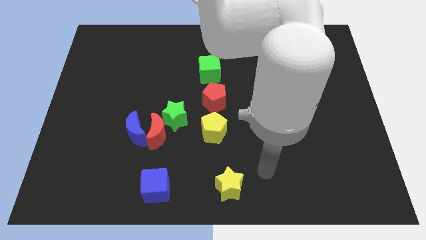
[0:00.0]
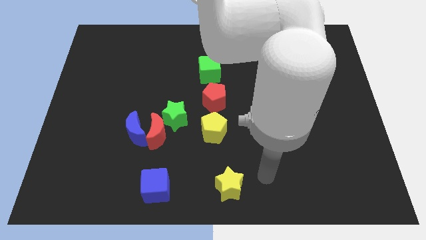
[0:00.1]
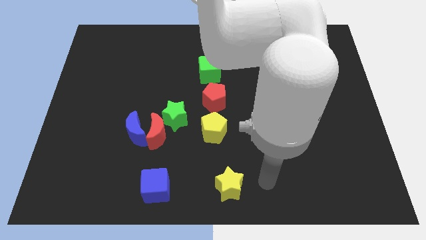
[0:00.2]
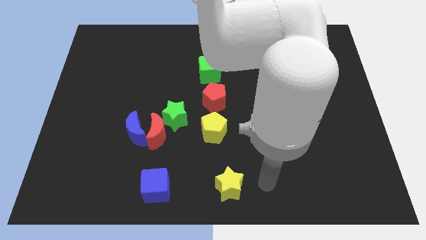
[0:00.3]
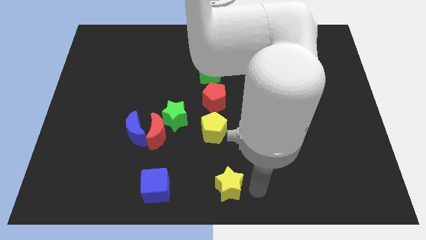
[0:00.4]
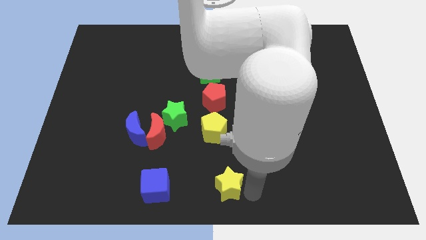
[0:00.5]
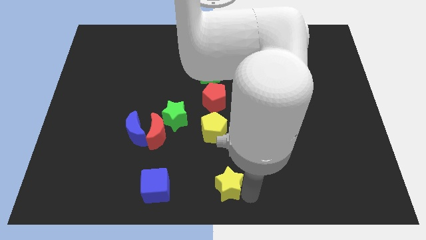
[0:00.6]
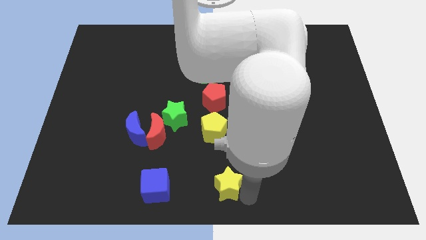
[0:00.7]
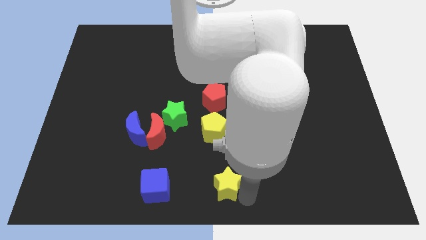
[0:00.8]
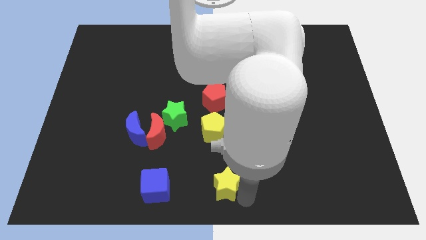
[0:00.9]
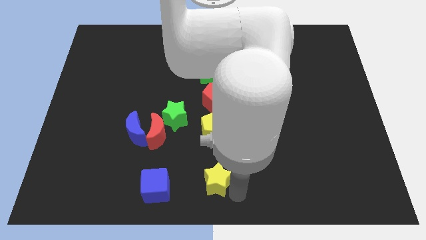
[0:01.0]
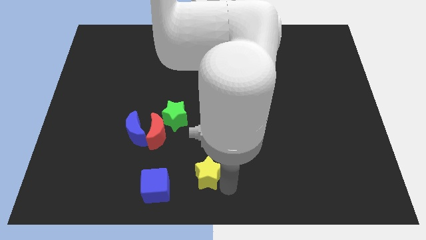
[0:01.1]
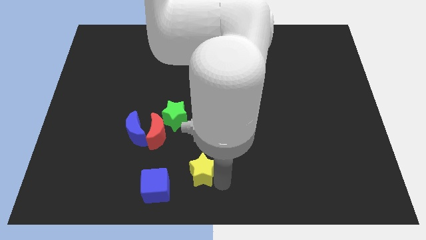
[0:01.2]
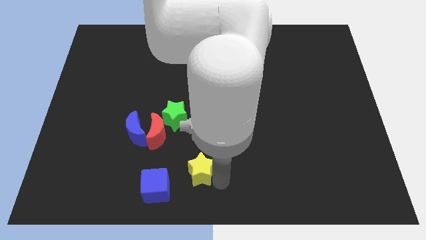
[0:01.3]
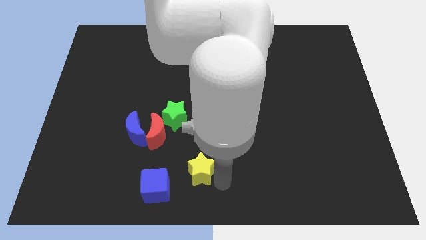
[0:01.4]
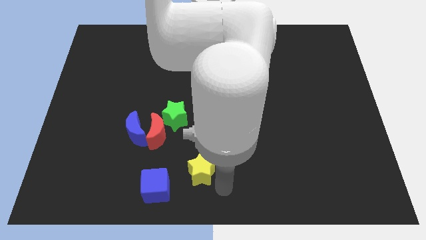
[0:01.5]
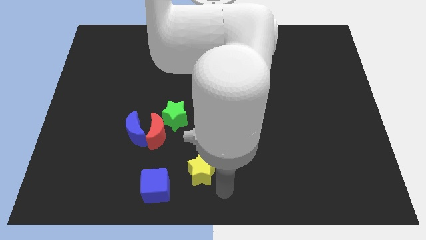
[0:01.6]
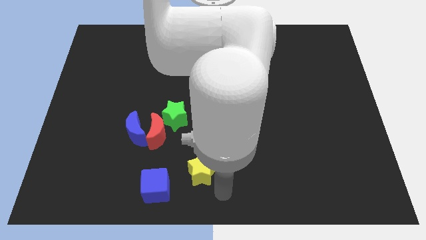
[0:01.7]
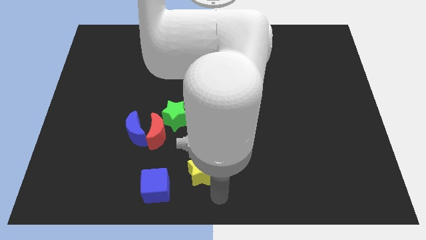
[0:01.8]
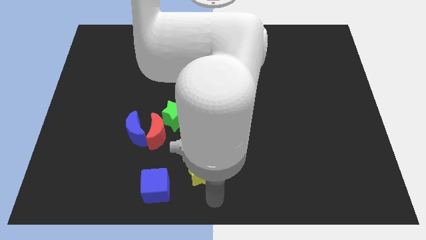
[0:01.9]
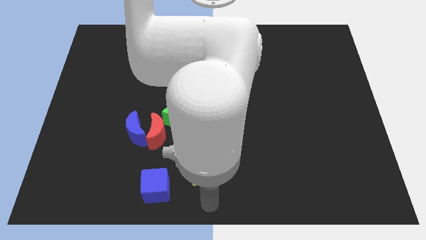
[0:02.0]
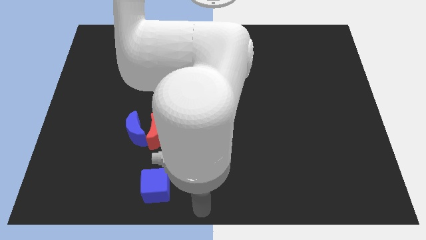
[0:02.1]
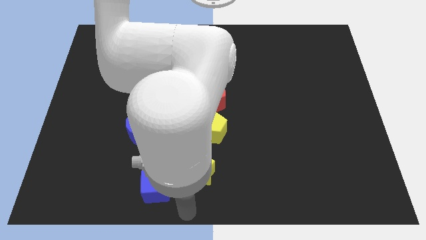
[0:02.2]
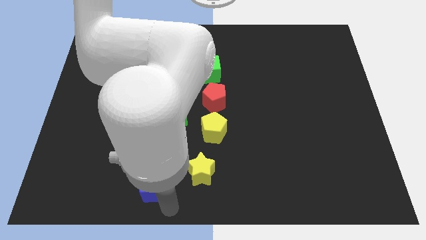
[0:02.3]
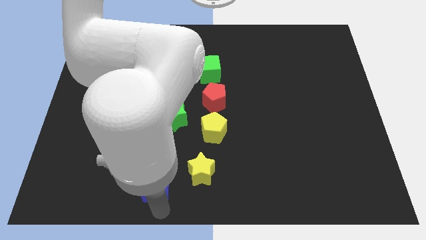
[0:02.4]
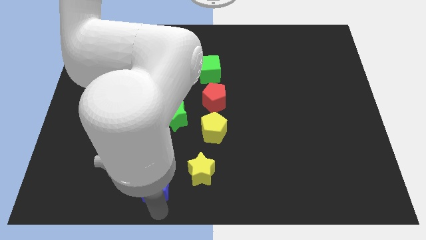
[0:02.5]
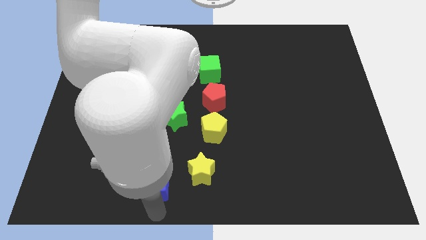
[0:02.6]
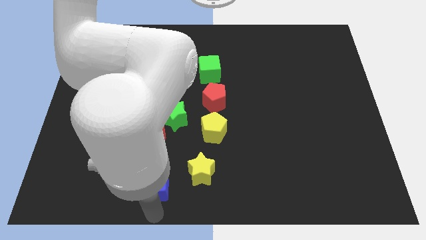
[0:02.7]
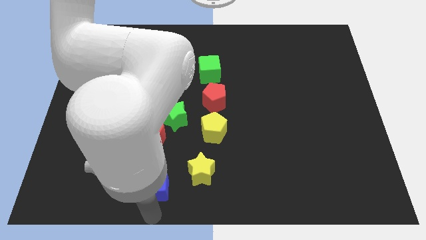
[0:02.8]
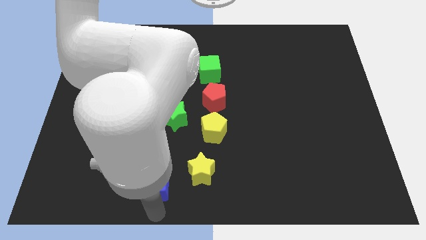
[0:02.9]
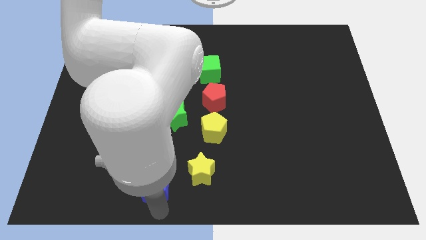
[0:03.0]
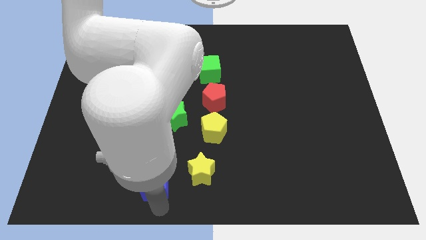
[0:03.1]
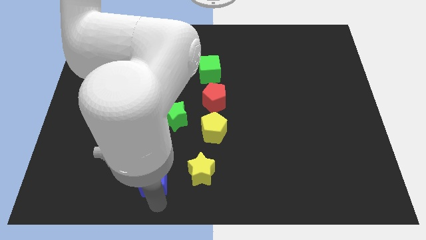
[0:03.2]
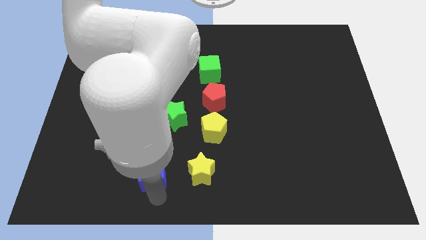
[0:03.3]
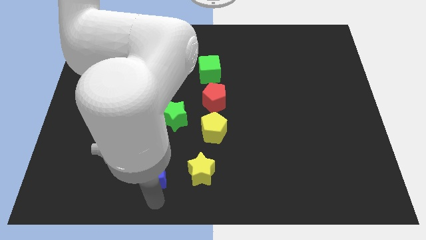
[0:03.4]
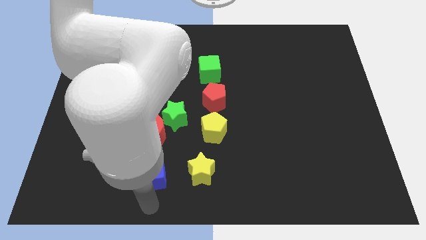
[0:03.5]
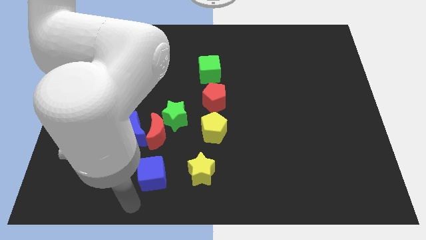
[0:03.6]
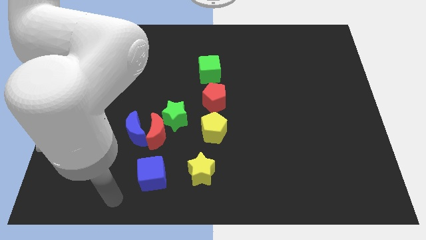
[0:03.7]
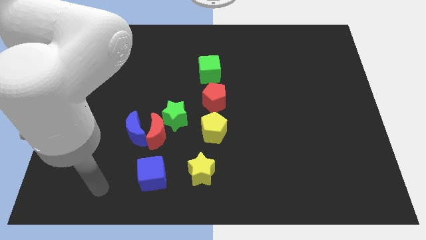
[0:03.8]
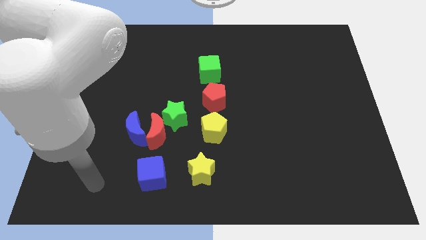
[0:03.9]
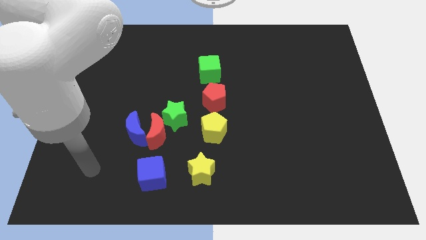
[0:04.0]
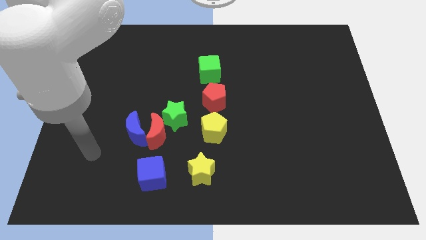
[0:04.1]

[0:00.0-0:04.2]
push yellow star and blue cube slightly upwards

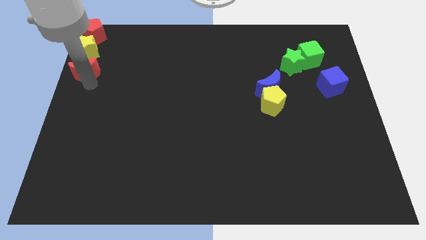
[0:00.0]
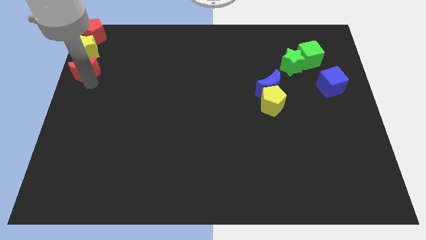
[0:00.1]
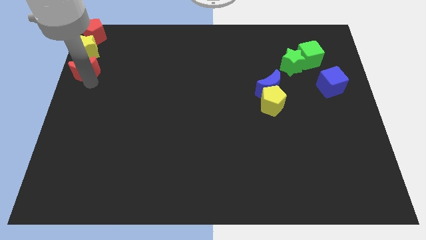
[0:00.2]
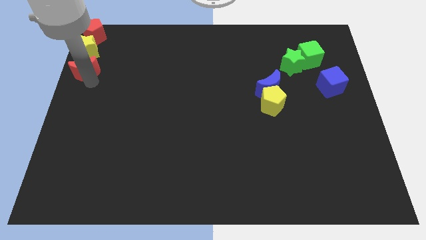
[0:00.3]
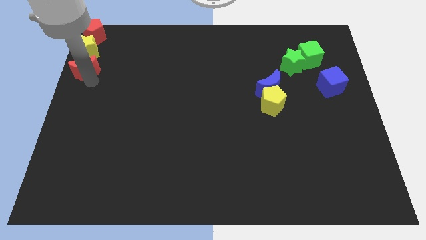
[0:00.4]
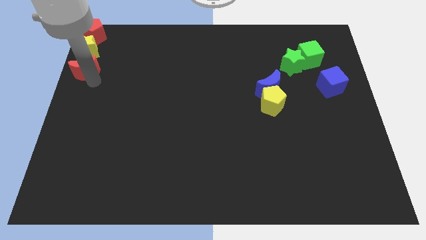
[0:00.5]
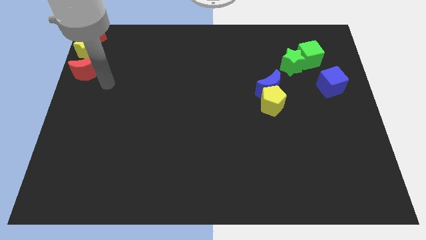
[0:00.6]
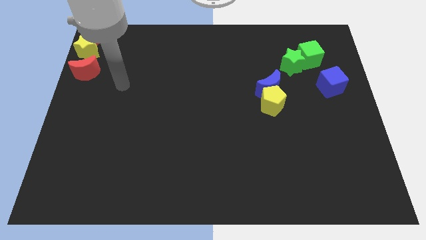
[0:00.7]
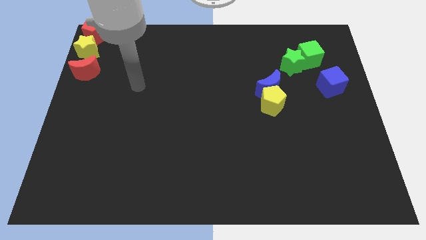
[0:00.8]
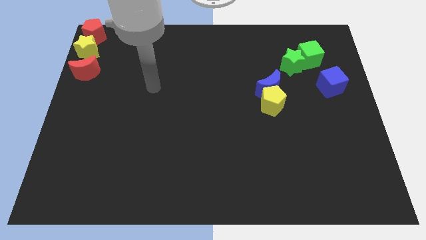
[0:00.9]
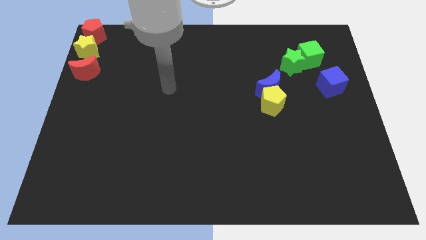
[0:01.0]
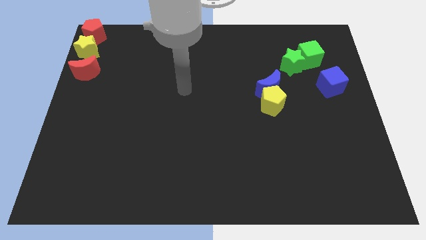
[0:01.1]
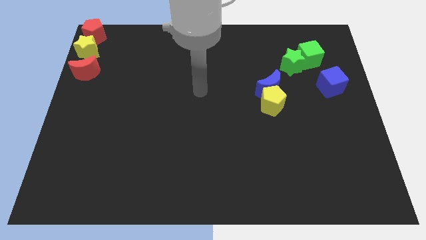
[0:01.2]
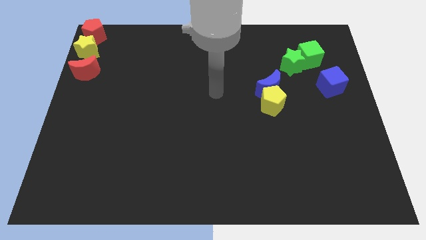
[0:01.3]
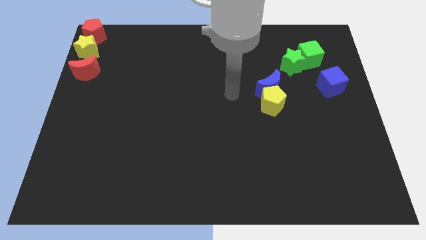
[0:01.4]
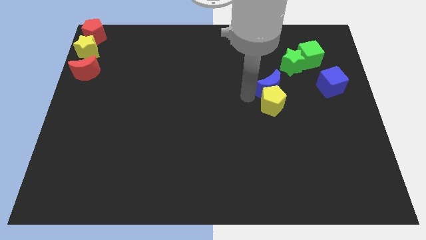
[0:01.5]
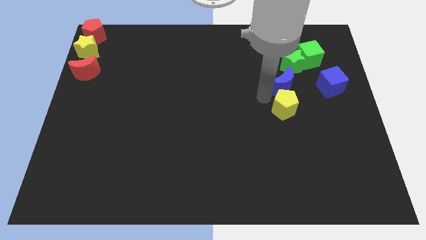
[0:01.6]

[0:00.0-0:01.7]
place the arm to the left of the yellow pentagon

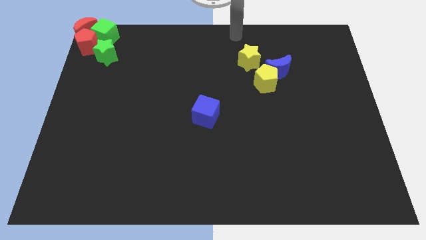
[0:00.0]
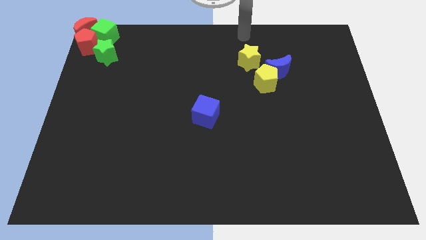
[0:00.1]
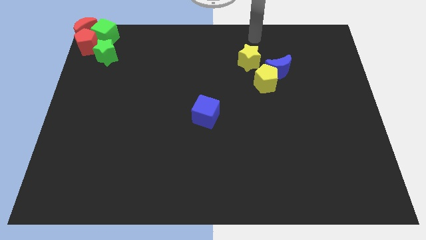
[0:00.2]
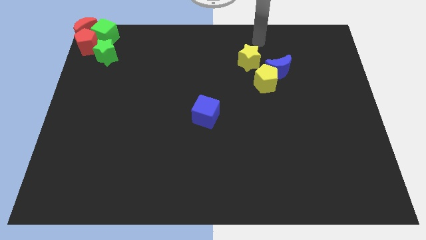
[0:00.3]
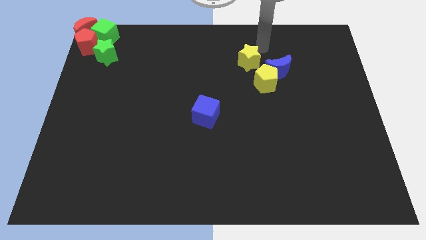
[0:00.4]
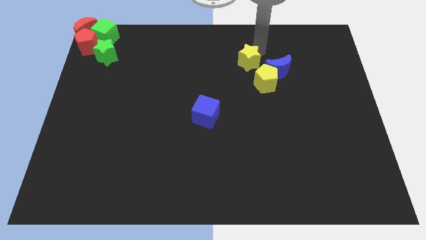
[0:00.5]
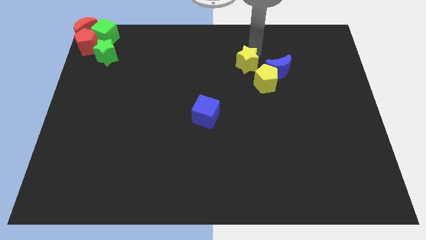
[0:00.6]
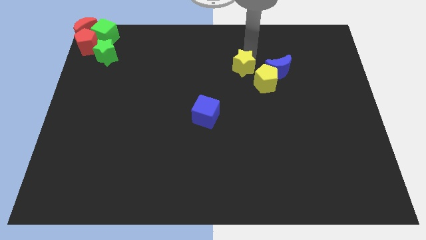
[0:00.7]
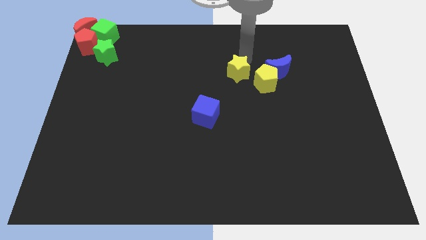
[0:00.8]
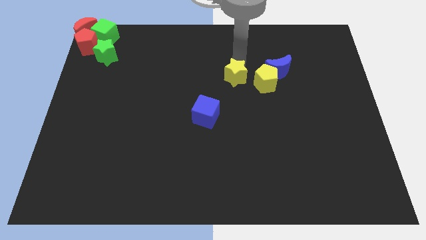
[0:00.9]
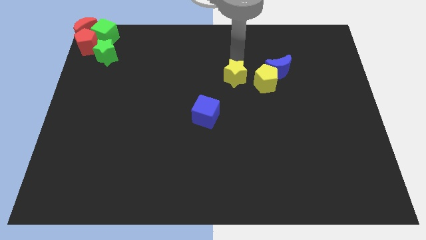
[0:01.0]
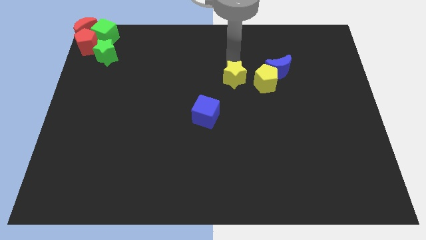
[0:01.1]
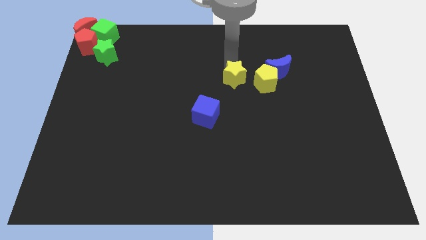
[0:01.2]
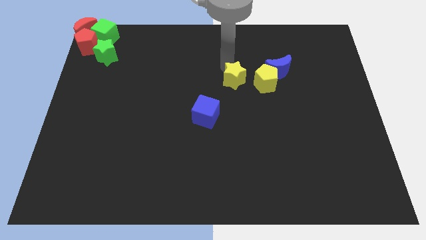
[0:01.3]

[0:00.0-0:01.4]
move the yellow star slightly to the bottom

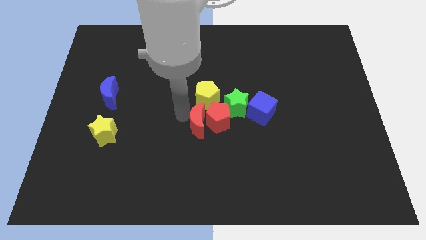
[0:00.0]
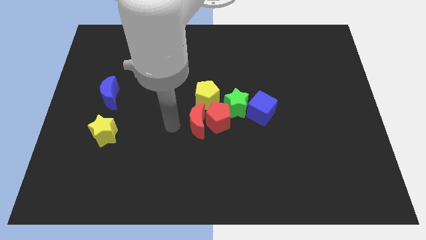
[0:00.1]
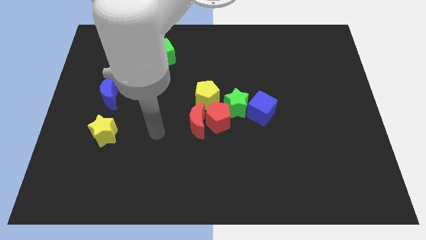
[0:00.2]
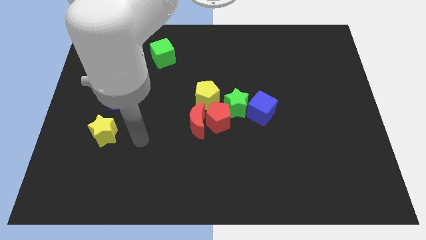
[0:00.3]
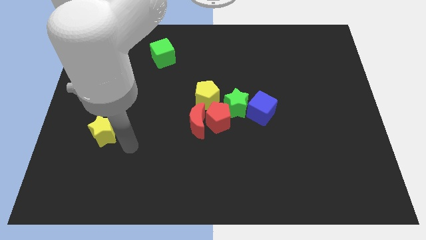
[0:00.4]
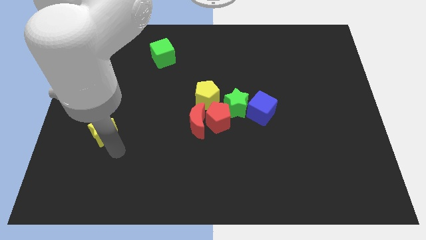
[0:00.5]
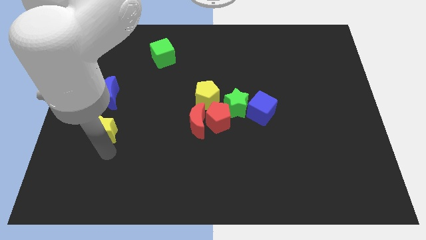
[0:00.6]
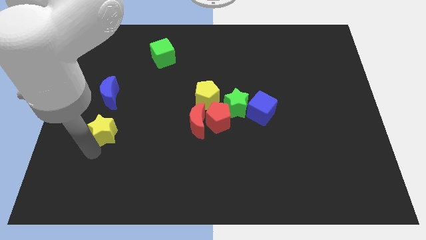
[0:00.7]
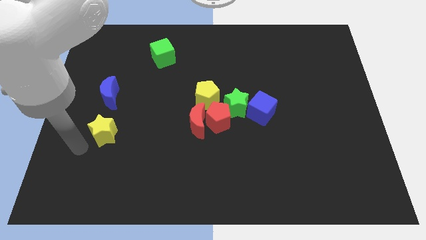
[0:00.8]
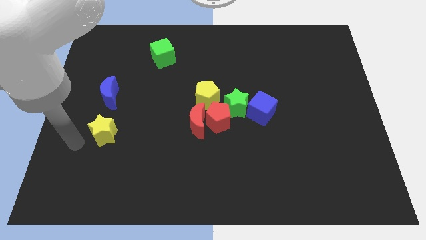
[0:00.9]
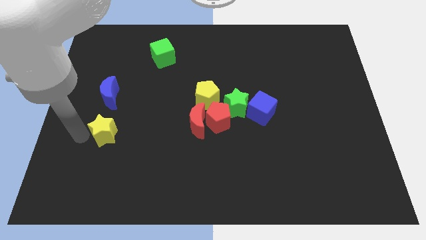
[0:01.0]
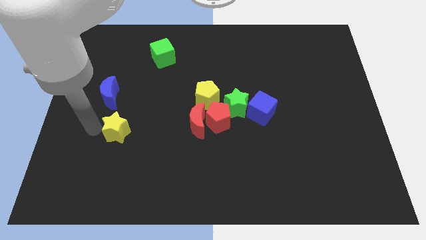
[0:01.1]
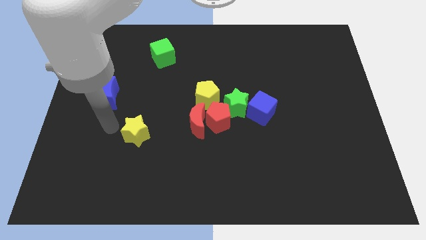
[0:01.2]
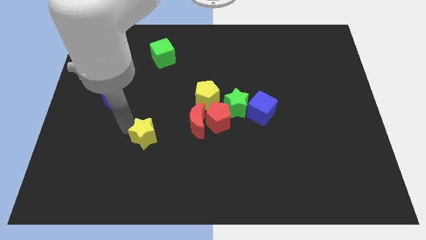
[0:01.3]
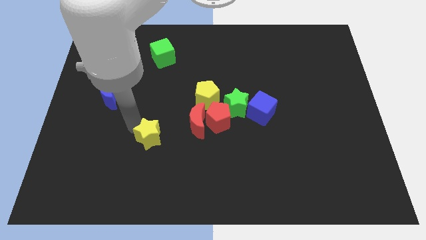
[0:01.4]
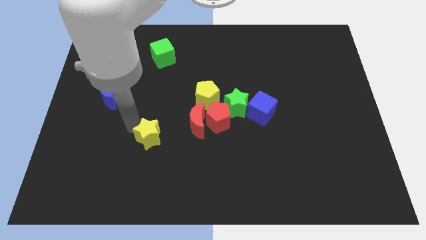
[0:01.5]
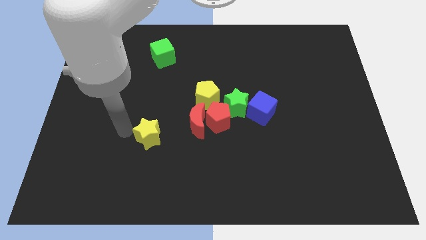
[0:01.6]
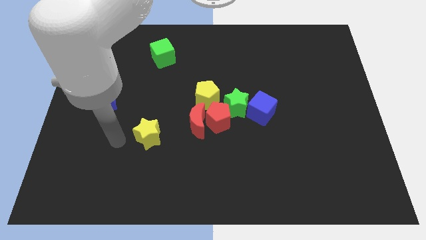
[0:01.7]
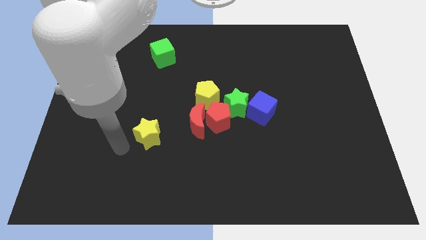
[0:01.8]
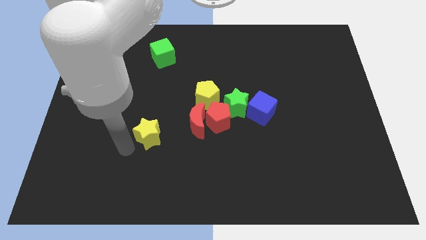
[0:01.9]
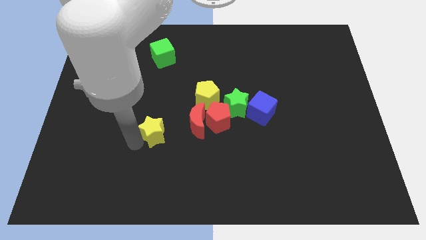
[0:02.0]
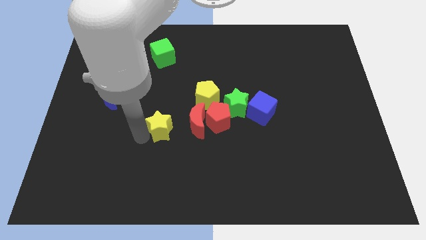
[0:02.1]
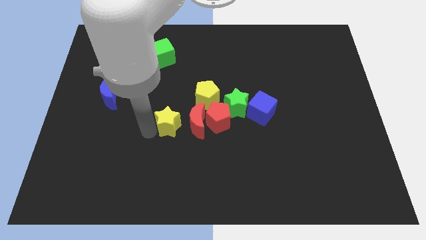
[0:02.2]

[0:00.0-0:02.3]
move the yellow star towards the red moon
